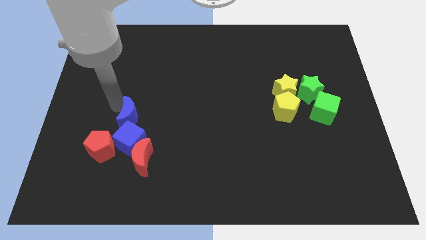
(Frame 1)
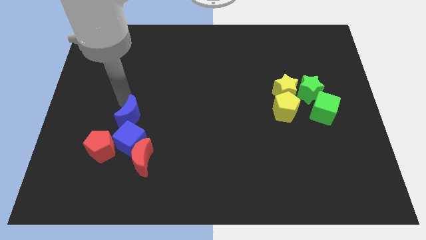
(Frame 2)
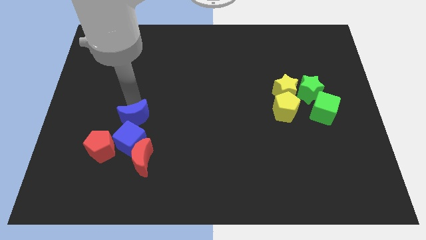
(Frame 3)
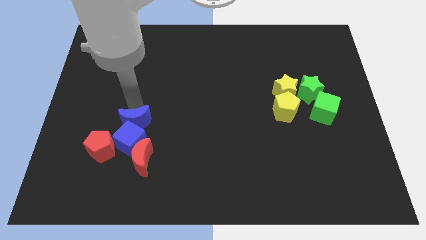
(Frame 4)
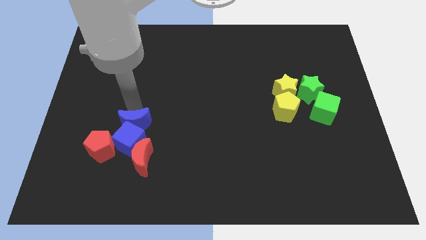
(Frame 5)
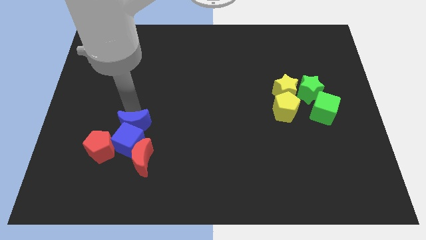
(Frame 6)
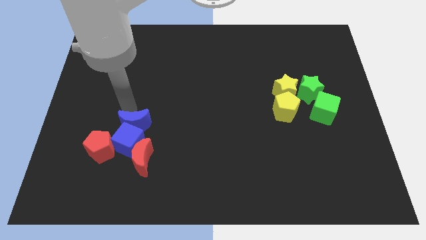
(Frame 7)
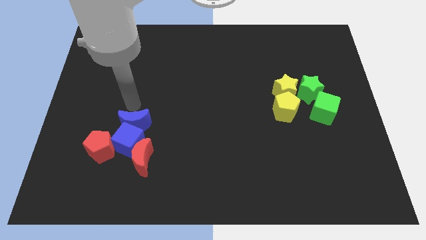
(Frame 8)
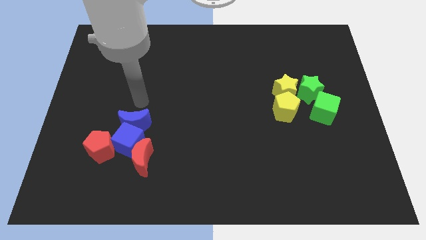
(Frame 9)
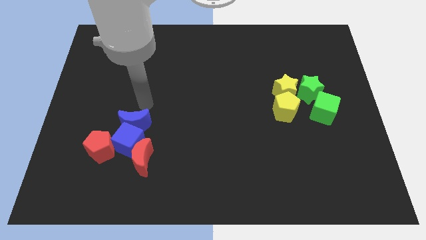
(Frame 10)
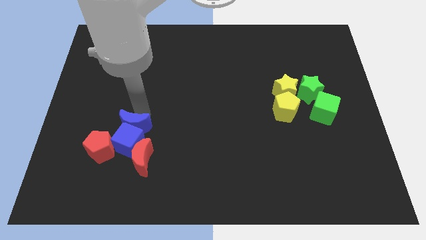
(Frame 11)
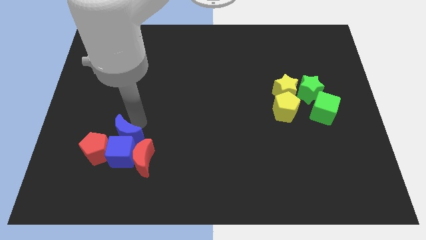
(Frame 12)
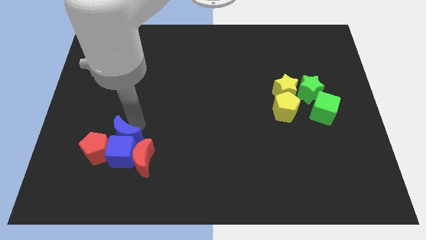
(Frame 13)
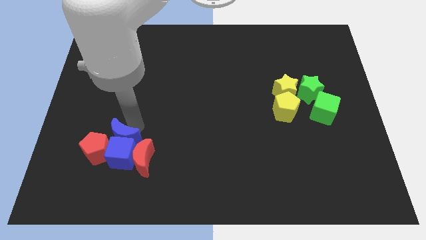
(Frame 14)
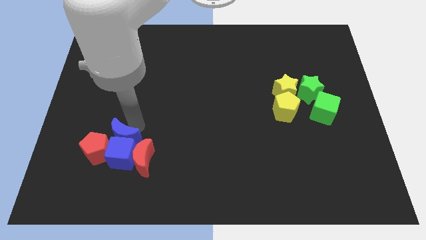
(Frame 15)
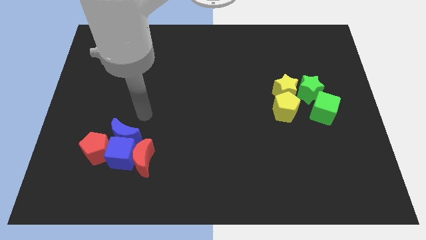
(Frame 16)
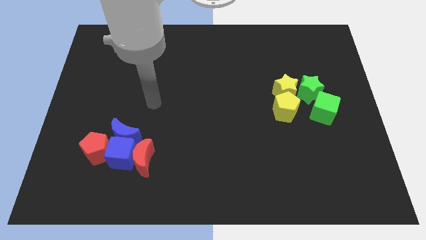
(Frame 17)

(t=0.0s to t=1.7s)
move the blue cube in between red moon and the red pentagon

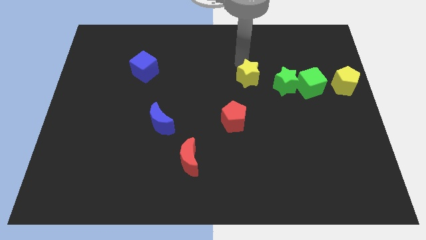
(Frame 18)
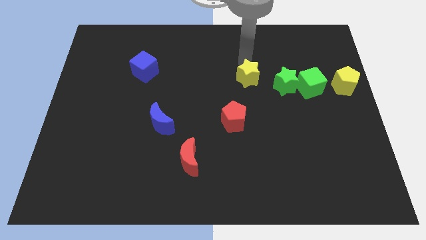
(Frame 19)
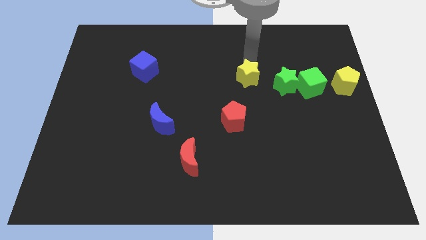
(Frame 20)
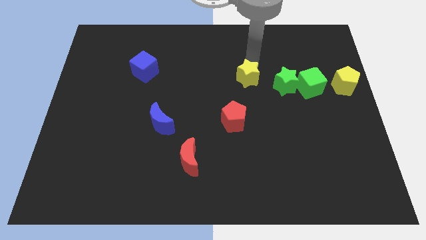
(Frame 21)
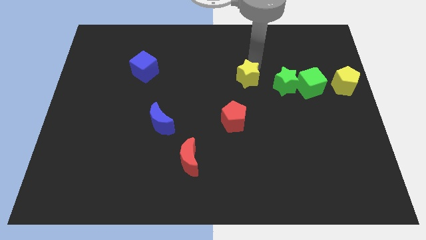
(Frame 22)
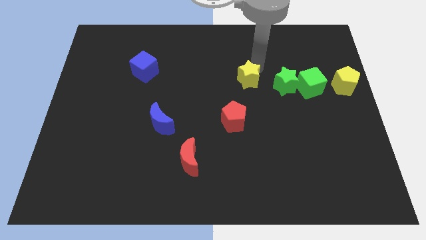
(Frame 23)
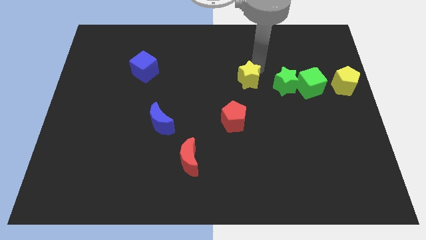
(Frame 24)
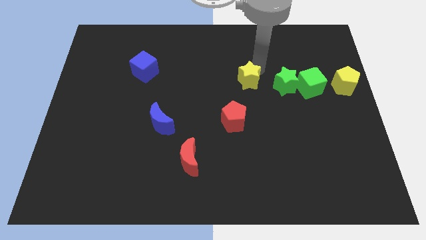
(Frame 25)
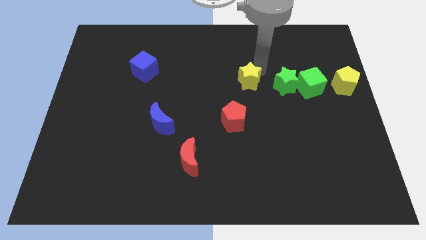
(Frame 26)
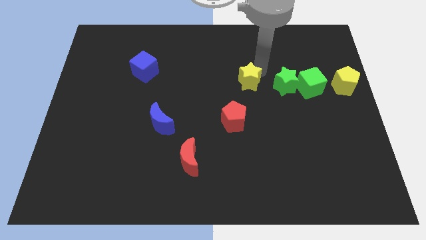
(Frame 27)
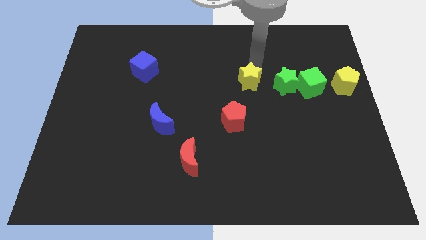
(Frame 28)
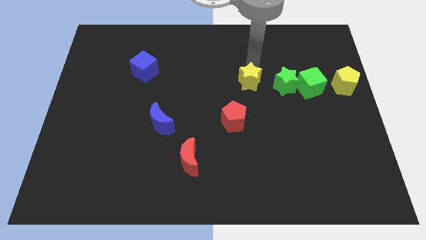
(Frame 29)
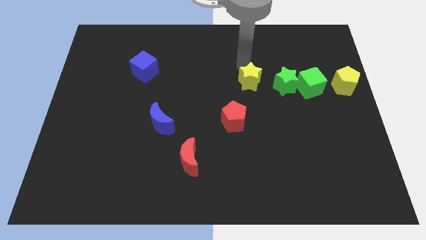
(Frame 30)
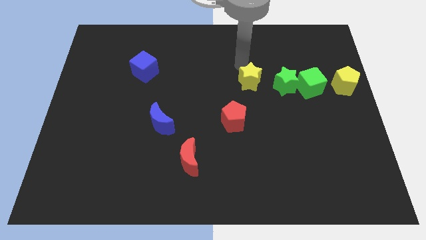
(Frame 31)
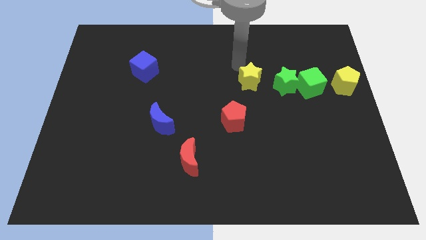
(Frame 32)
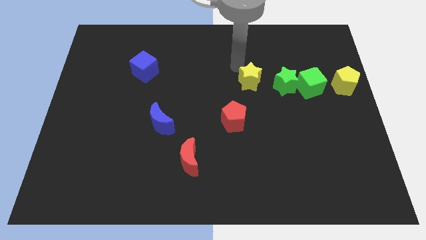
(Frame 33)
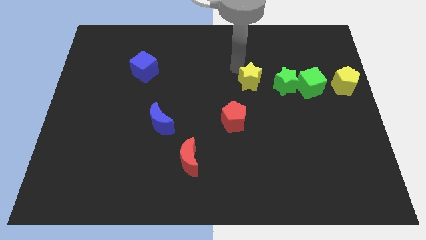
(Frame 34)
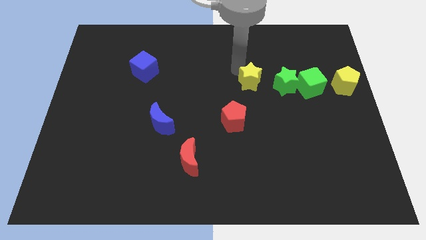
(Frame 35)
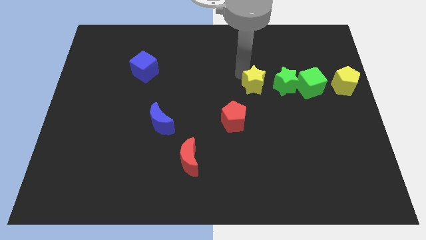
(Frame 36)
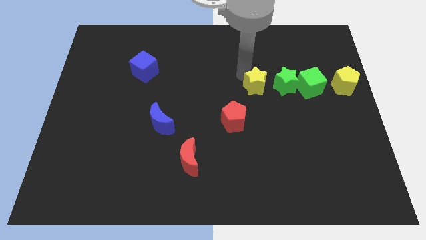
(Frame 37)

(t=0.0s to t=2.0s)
push yellow star beside green star

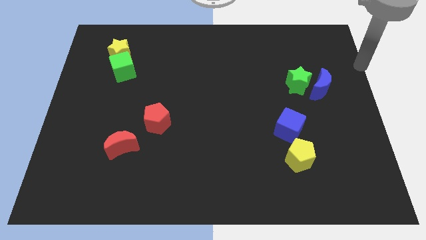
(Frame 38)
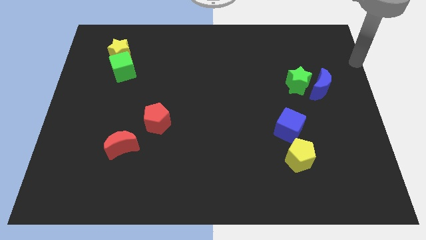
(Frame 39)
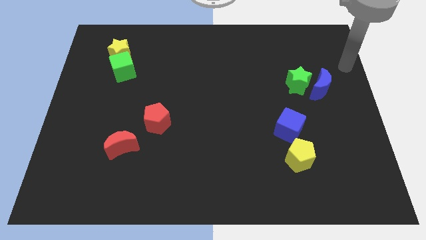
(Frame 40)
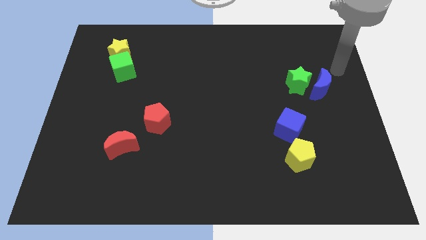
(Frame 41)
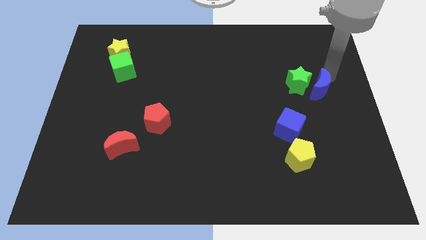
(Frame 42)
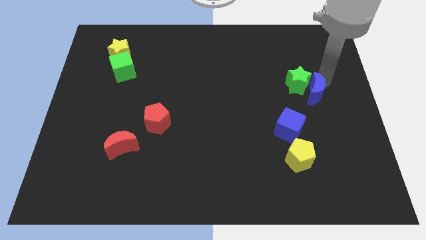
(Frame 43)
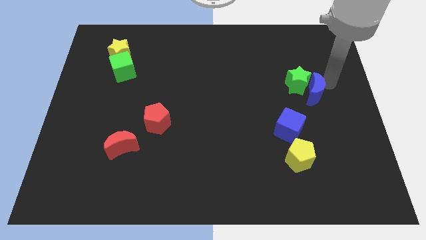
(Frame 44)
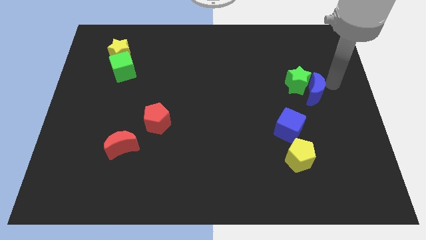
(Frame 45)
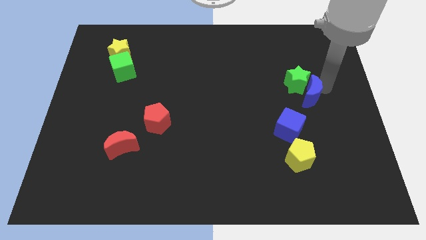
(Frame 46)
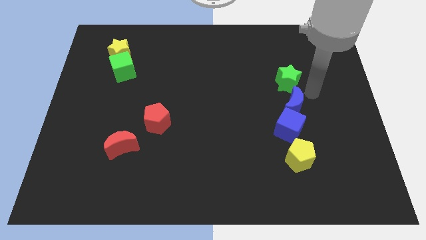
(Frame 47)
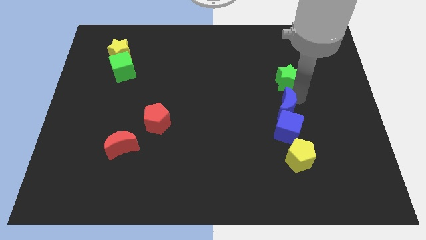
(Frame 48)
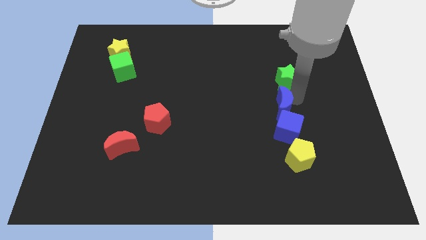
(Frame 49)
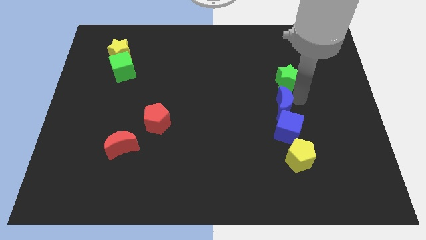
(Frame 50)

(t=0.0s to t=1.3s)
place the blue moon above the blue cube

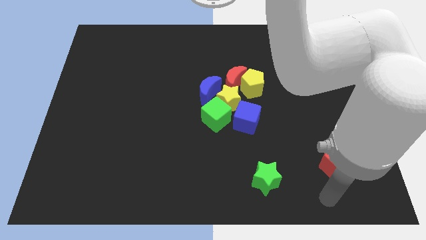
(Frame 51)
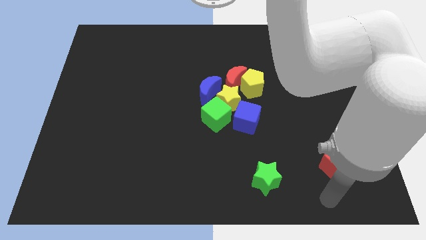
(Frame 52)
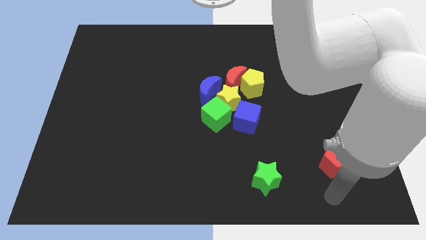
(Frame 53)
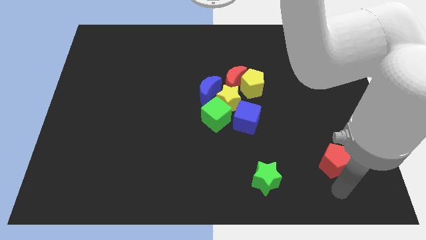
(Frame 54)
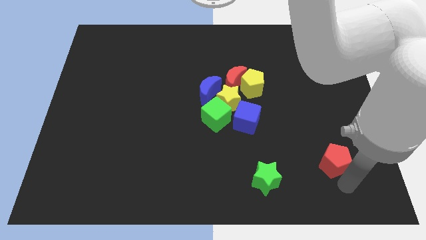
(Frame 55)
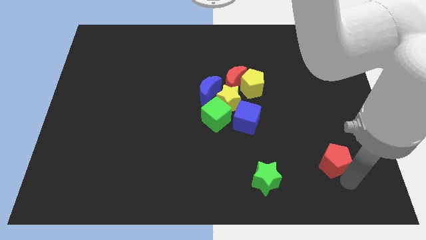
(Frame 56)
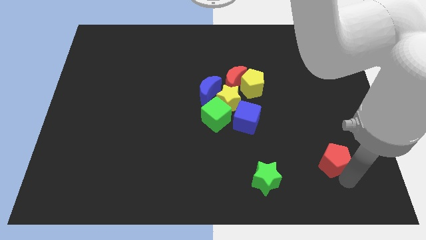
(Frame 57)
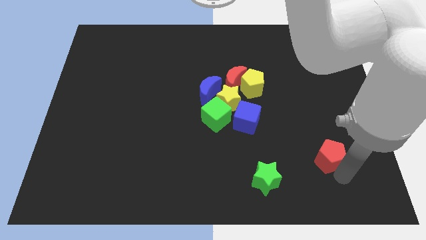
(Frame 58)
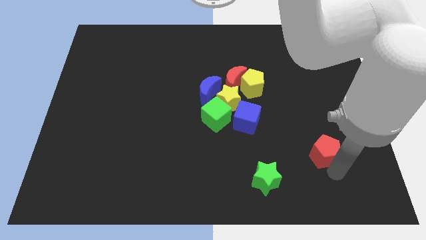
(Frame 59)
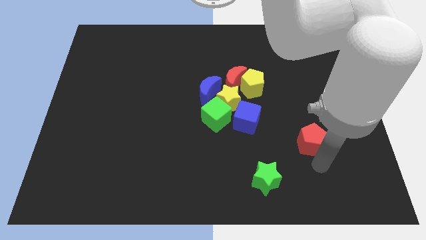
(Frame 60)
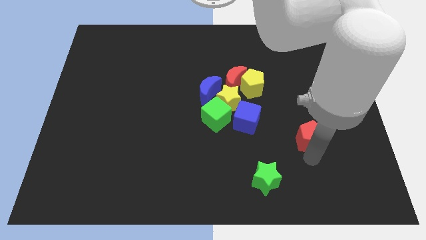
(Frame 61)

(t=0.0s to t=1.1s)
push the red pentagon to the top of the board

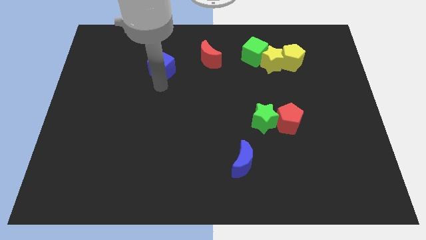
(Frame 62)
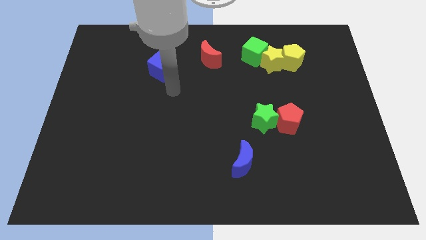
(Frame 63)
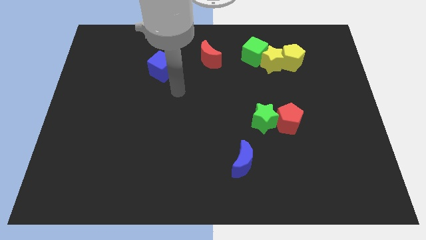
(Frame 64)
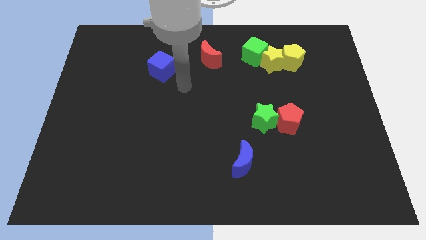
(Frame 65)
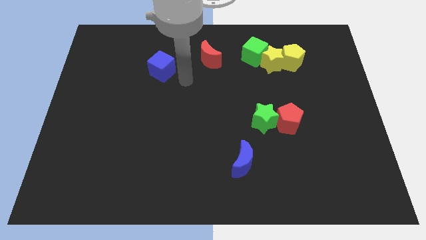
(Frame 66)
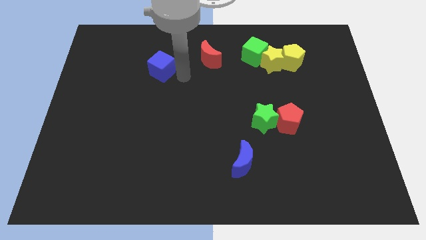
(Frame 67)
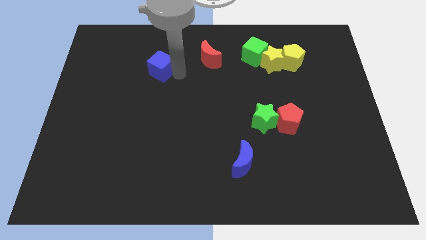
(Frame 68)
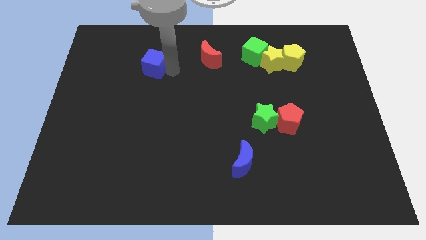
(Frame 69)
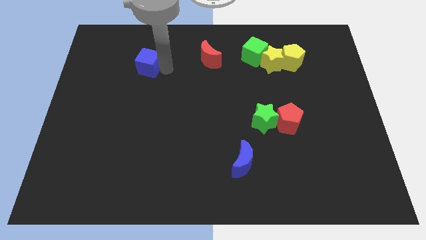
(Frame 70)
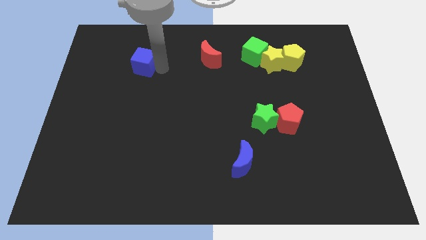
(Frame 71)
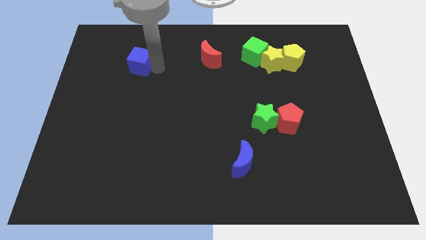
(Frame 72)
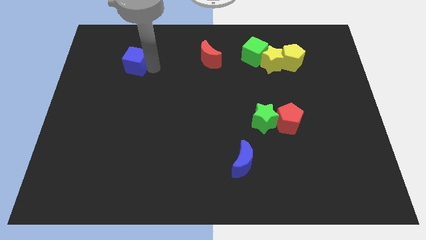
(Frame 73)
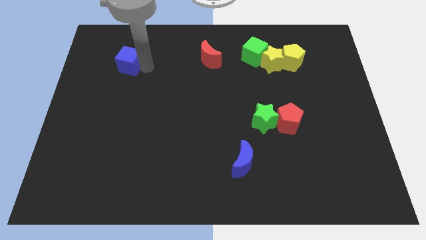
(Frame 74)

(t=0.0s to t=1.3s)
push the blue cube slightly to the left

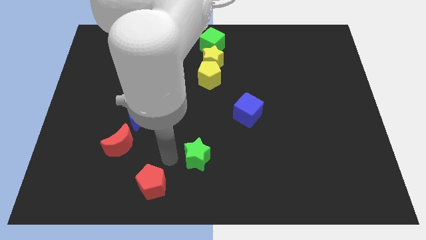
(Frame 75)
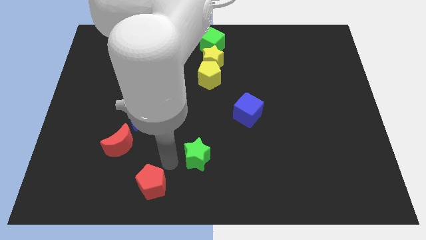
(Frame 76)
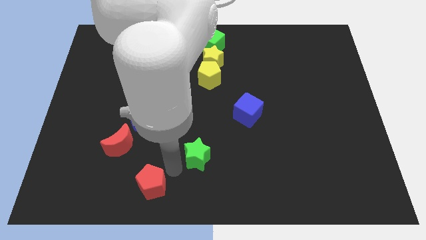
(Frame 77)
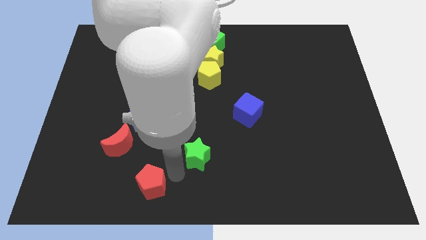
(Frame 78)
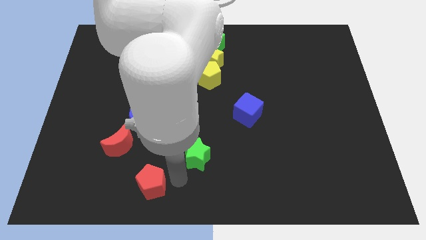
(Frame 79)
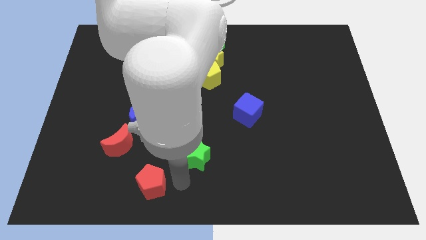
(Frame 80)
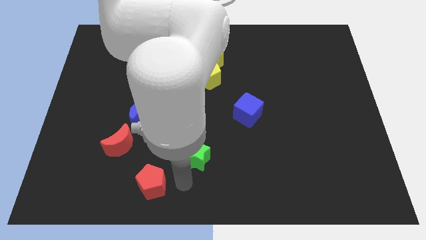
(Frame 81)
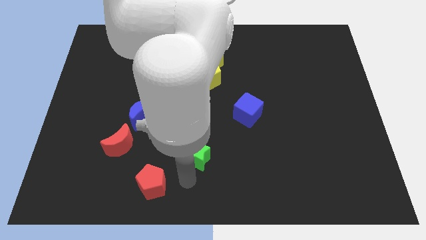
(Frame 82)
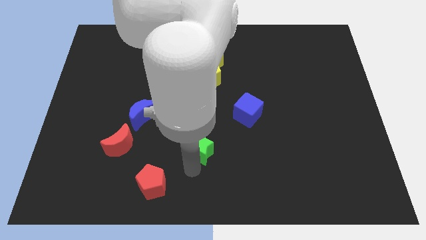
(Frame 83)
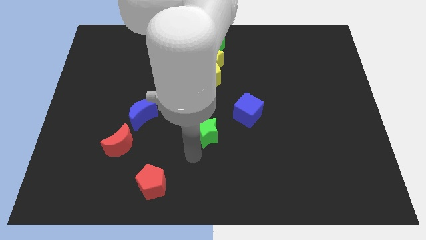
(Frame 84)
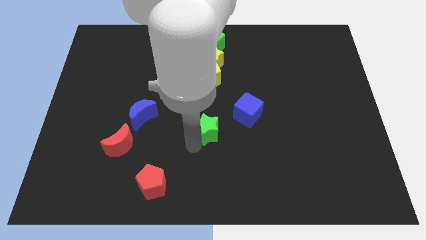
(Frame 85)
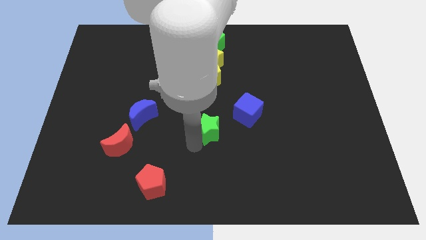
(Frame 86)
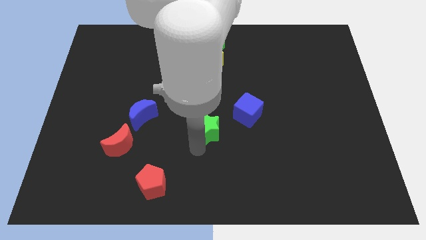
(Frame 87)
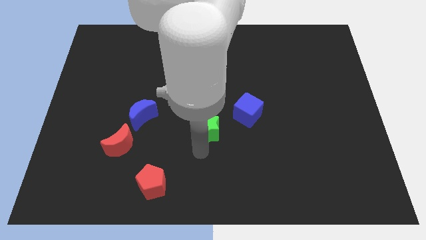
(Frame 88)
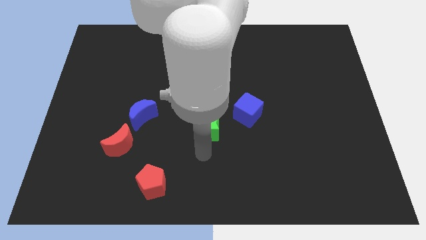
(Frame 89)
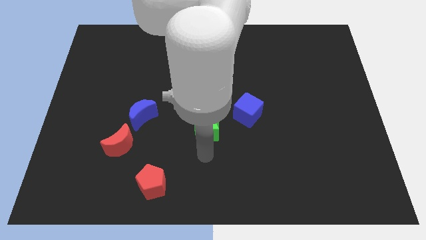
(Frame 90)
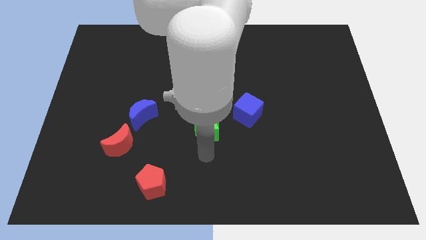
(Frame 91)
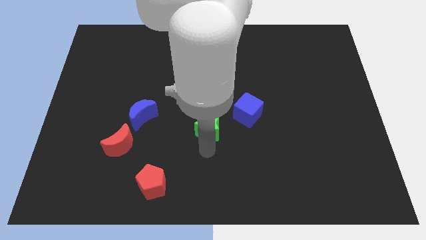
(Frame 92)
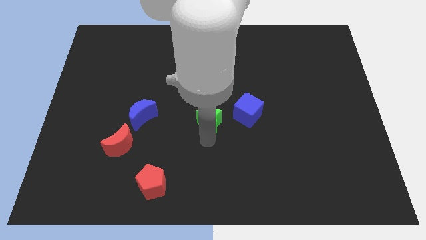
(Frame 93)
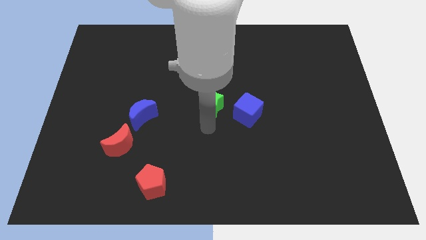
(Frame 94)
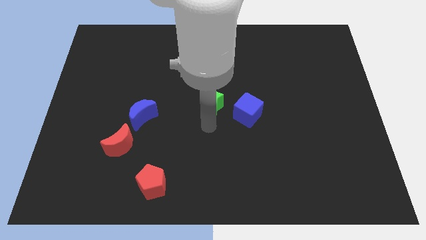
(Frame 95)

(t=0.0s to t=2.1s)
place the green star left to the blue cube
